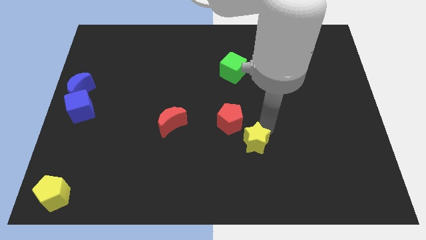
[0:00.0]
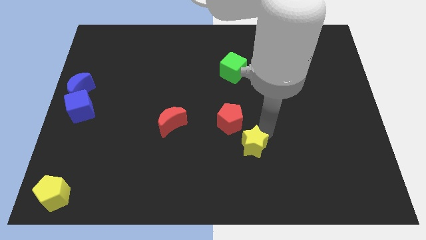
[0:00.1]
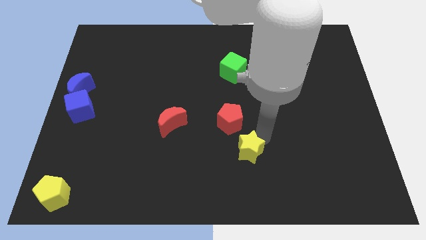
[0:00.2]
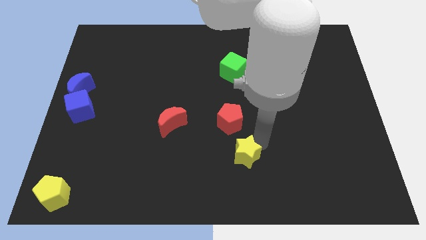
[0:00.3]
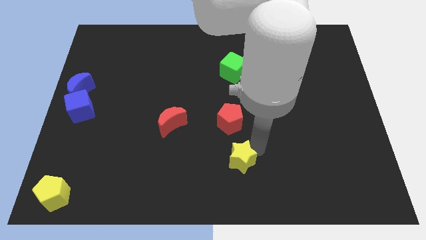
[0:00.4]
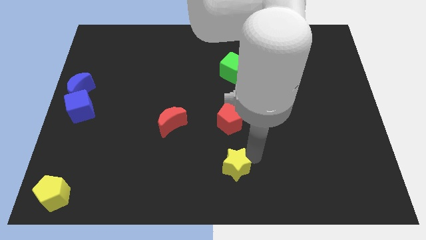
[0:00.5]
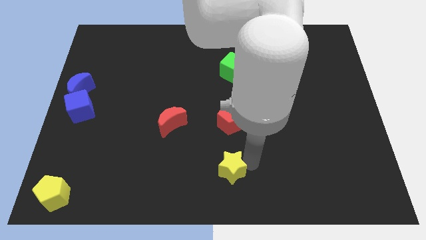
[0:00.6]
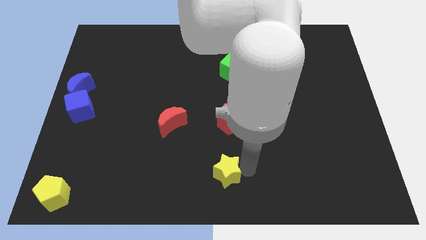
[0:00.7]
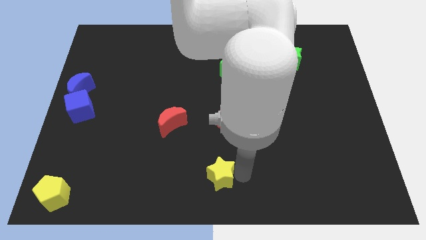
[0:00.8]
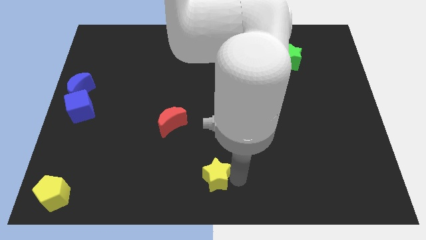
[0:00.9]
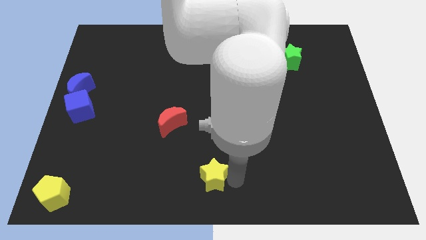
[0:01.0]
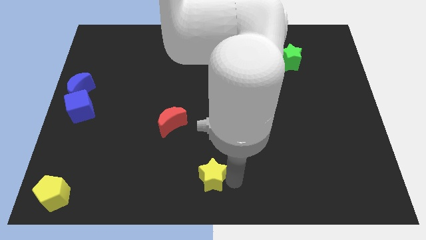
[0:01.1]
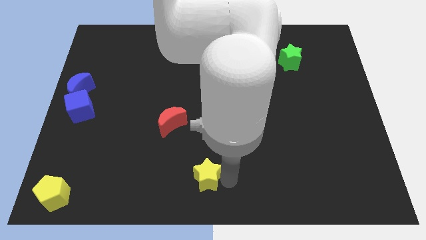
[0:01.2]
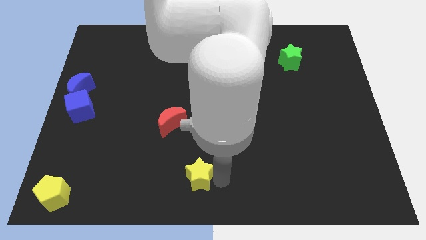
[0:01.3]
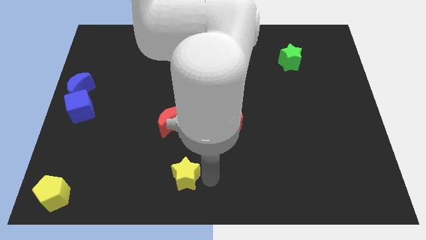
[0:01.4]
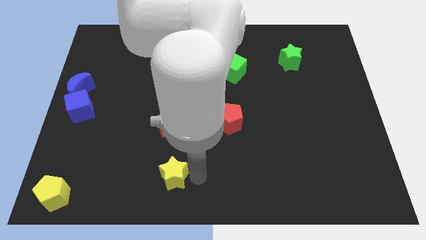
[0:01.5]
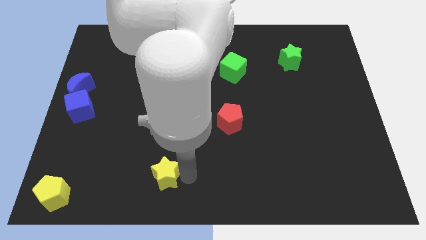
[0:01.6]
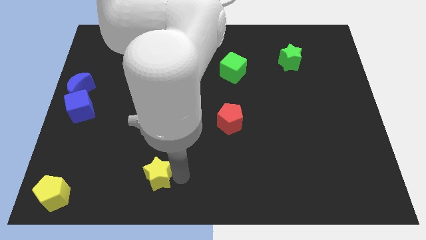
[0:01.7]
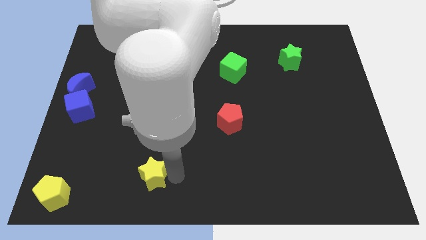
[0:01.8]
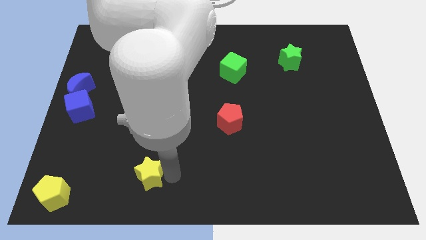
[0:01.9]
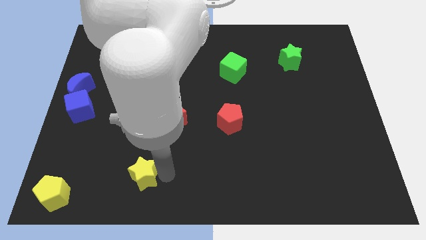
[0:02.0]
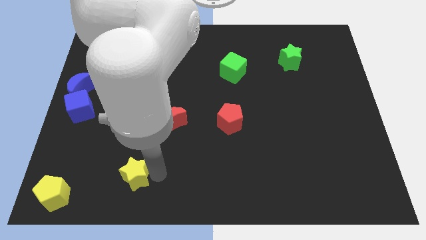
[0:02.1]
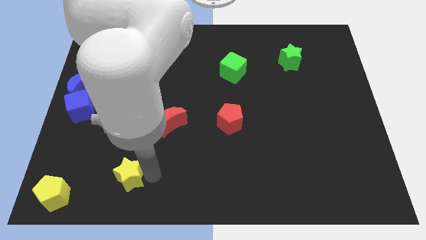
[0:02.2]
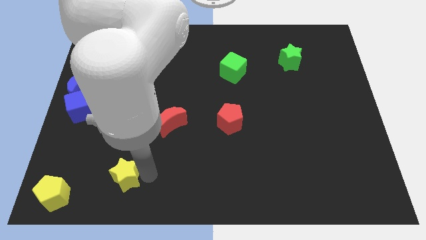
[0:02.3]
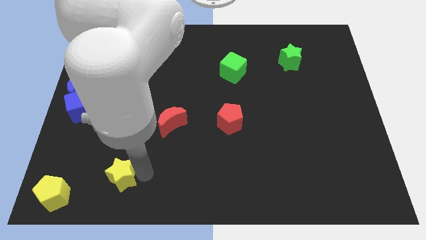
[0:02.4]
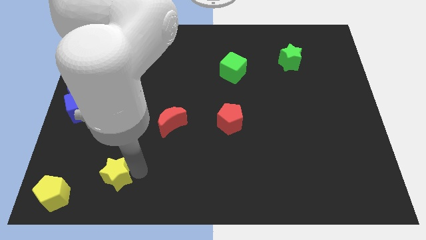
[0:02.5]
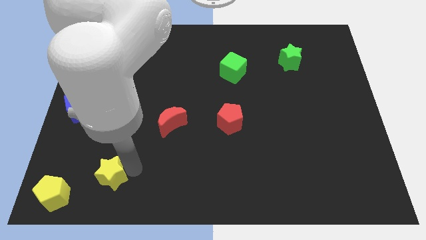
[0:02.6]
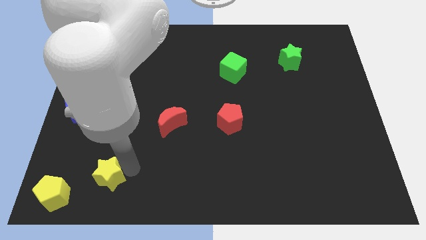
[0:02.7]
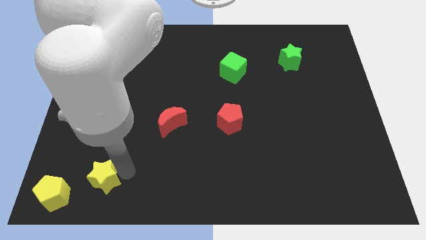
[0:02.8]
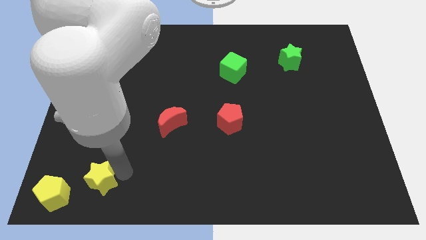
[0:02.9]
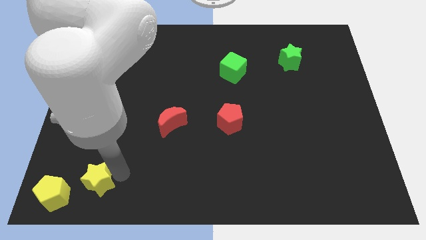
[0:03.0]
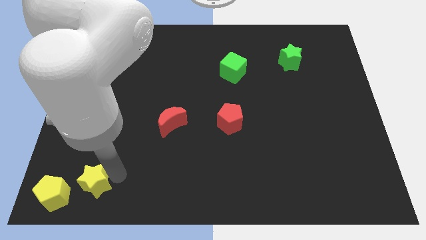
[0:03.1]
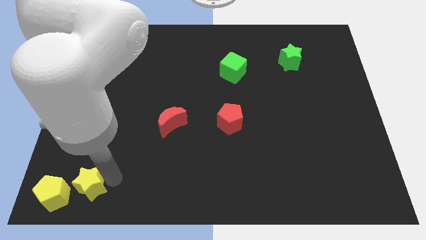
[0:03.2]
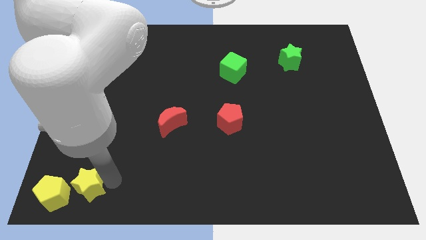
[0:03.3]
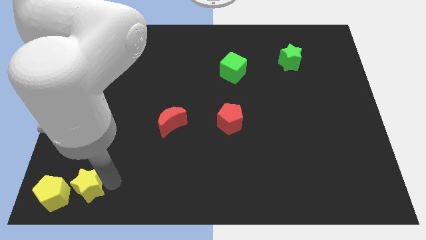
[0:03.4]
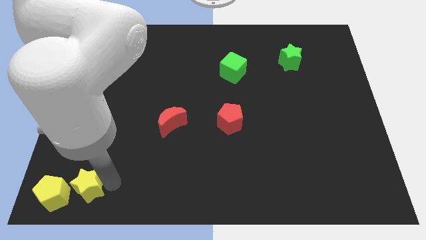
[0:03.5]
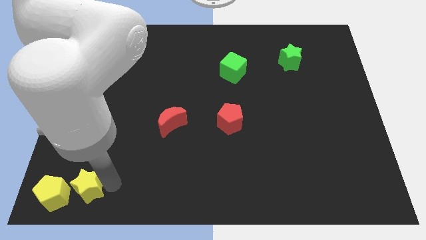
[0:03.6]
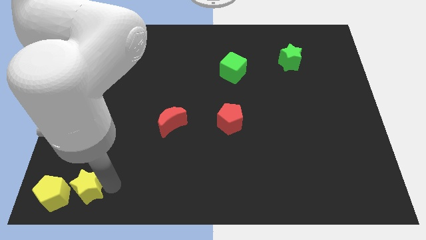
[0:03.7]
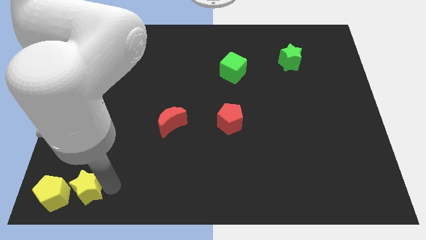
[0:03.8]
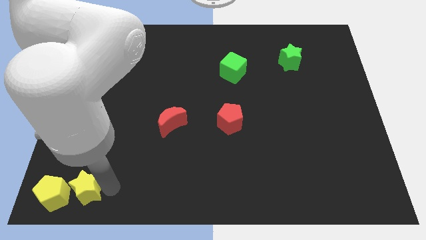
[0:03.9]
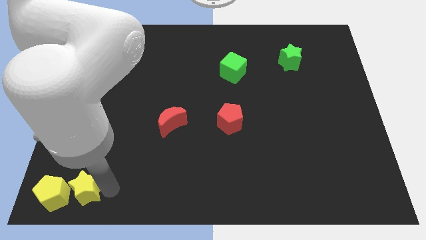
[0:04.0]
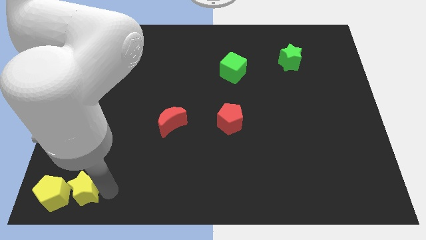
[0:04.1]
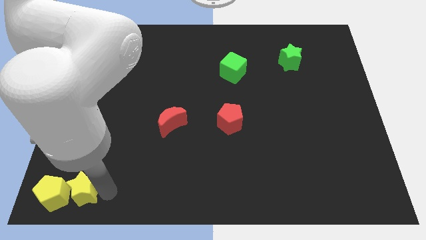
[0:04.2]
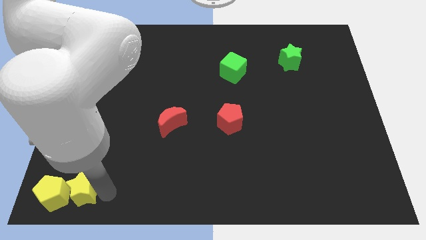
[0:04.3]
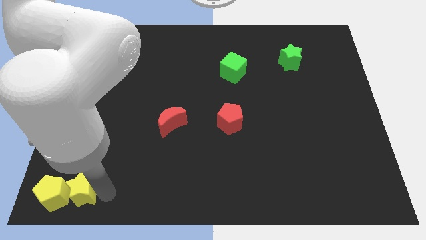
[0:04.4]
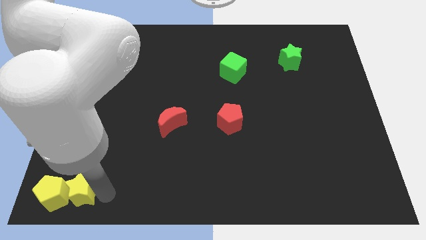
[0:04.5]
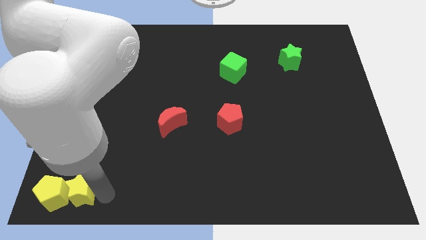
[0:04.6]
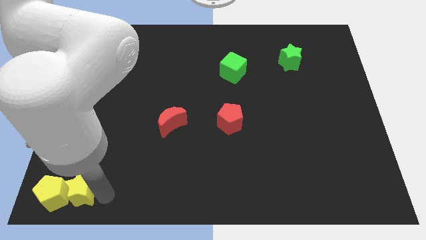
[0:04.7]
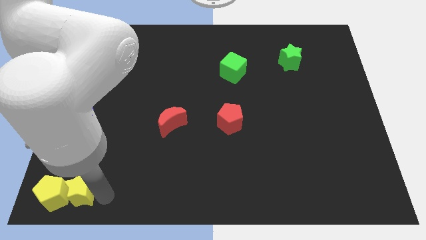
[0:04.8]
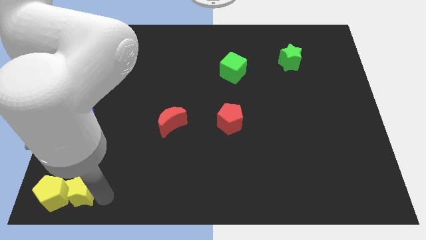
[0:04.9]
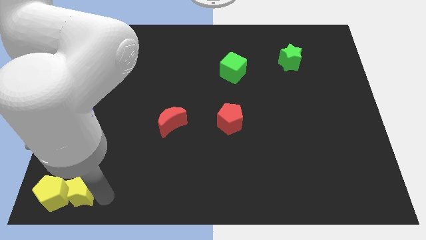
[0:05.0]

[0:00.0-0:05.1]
push the yellow star to the right of the yellow pentagon

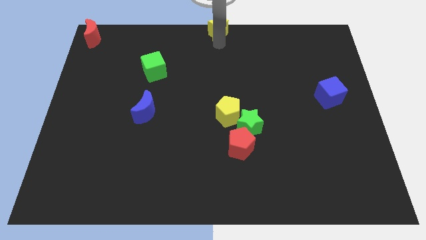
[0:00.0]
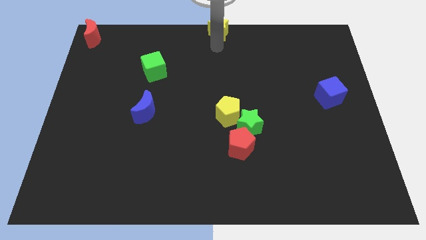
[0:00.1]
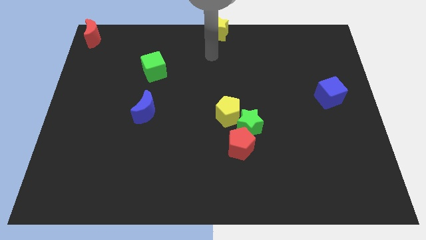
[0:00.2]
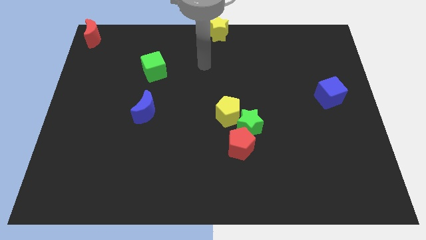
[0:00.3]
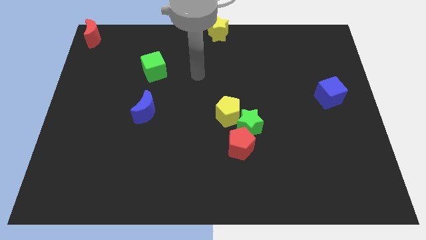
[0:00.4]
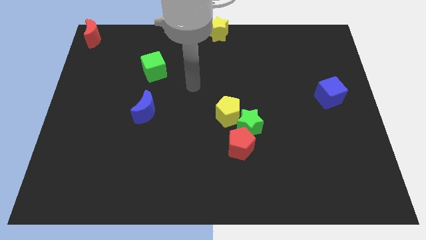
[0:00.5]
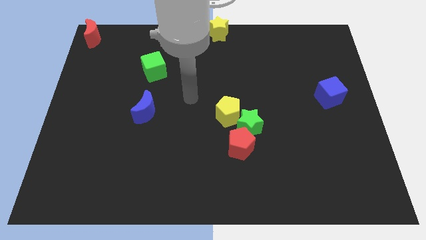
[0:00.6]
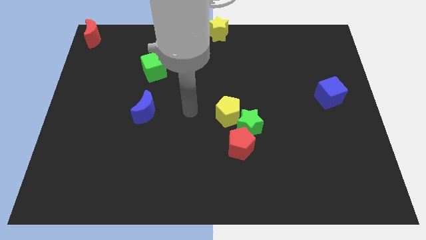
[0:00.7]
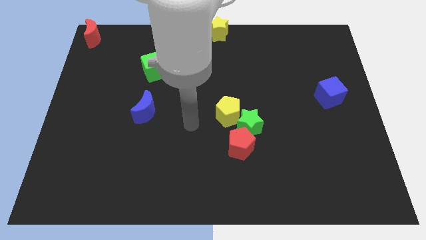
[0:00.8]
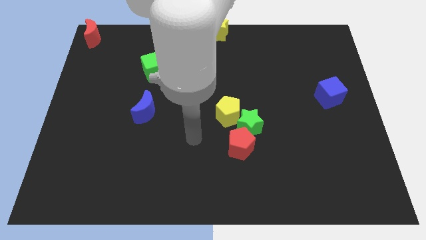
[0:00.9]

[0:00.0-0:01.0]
move yourself away from yellow star

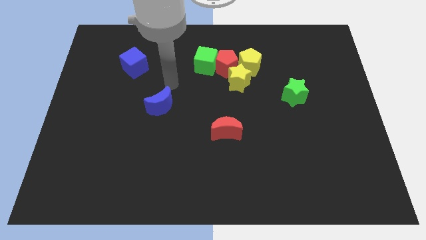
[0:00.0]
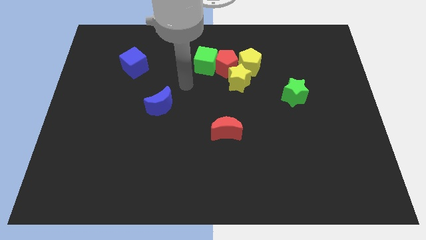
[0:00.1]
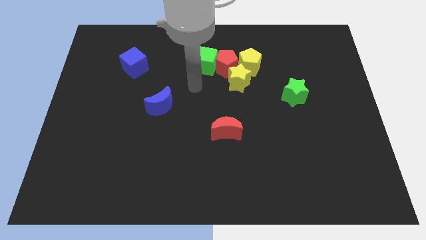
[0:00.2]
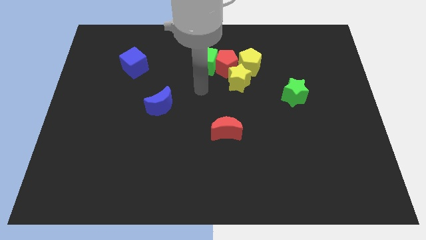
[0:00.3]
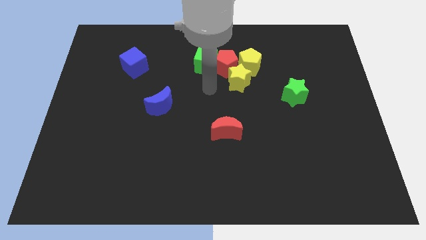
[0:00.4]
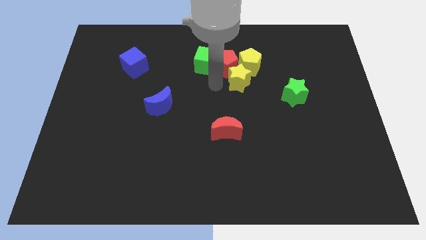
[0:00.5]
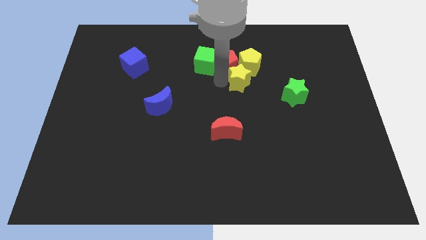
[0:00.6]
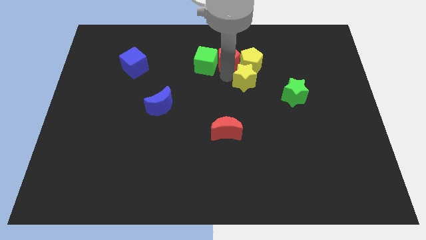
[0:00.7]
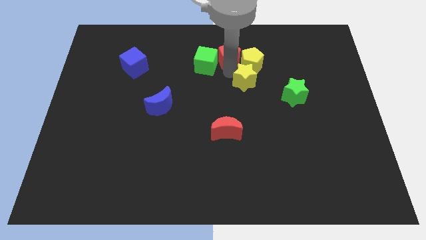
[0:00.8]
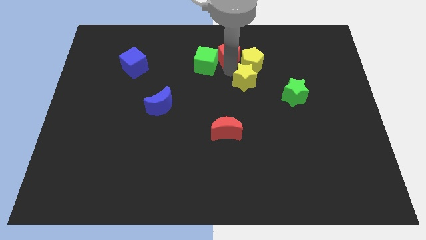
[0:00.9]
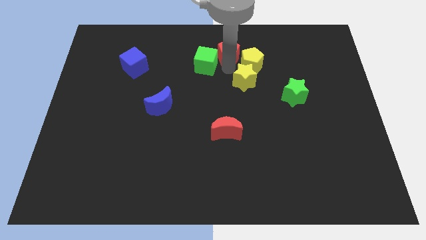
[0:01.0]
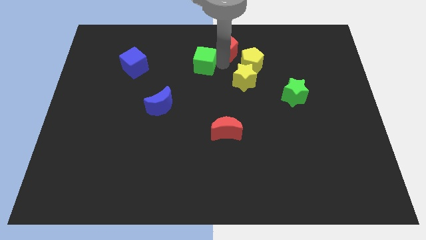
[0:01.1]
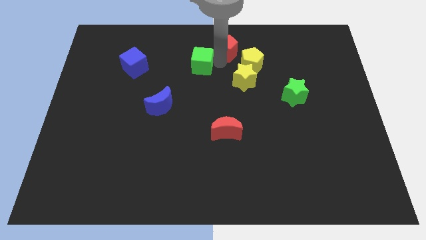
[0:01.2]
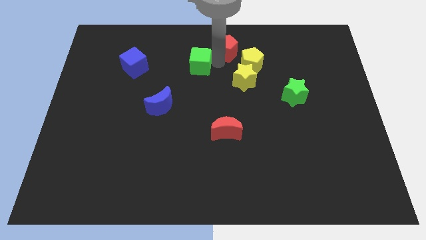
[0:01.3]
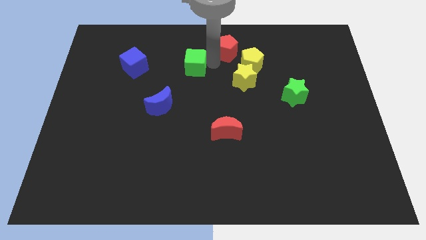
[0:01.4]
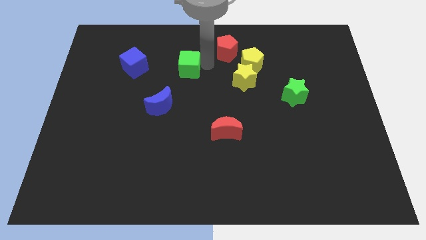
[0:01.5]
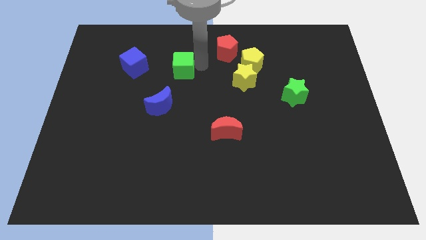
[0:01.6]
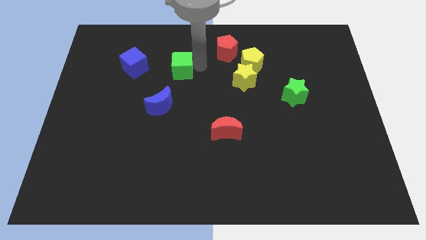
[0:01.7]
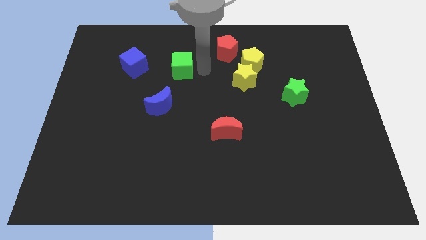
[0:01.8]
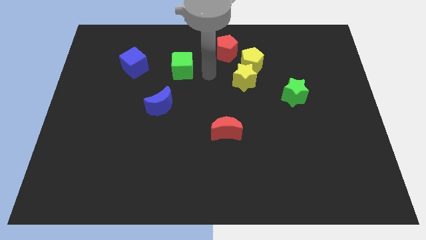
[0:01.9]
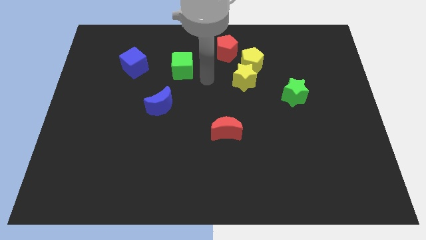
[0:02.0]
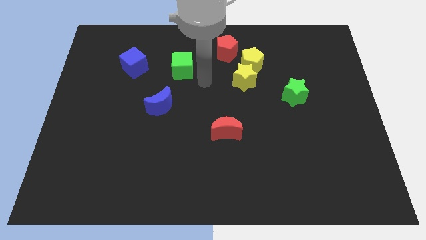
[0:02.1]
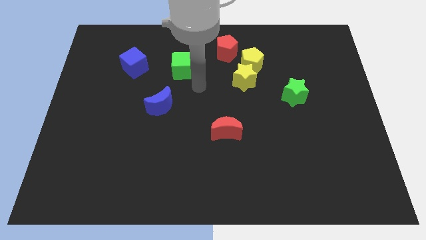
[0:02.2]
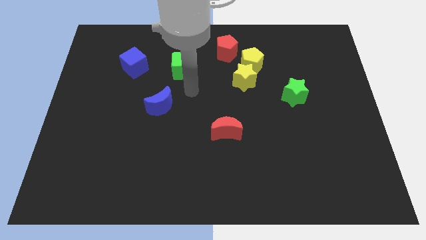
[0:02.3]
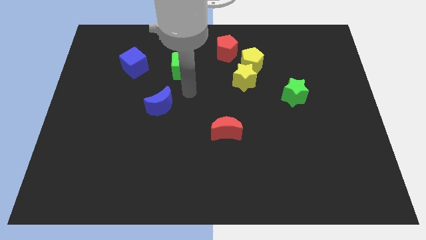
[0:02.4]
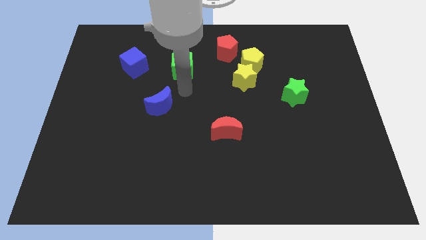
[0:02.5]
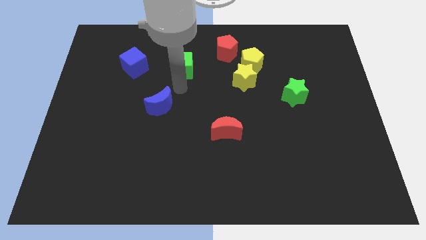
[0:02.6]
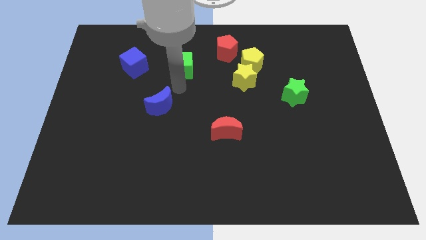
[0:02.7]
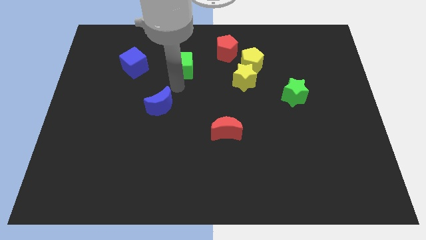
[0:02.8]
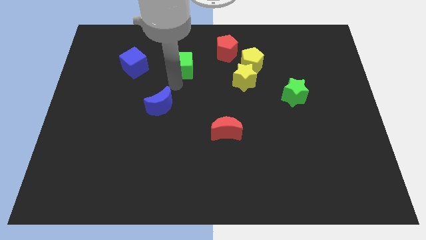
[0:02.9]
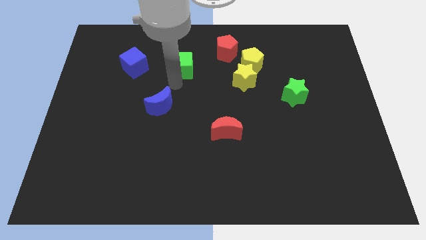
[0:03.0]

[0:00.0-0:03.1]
separate the red pentagon from the green cube and yellow pentagon
